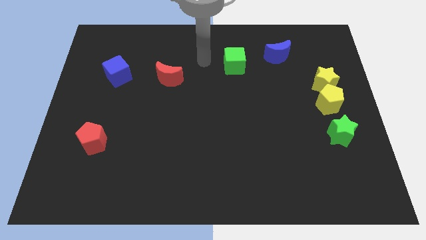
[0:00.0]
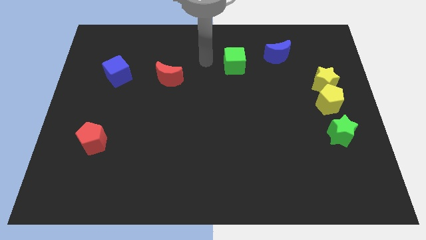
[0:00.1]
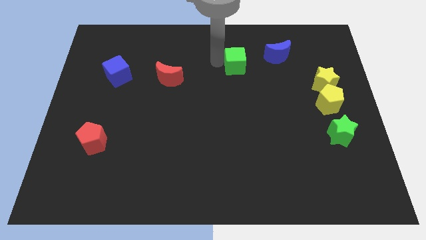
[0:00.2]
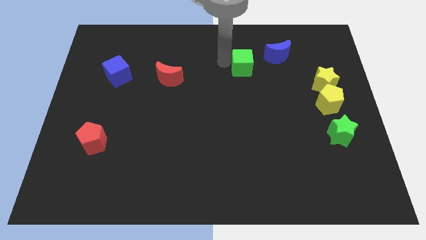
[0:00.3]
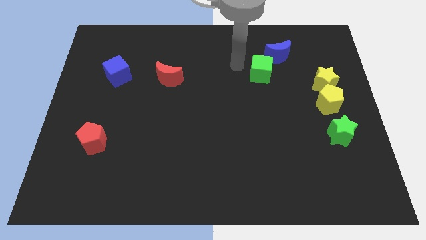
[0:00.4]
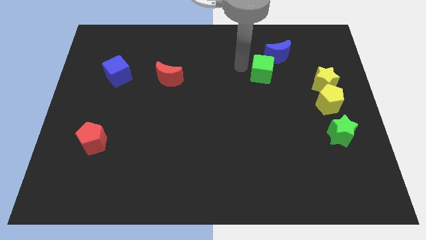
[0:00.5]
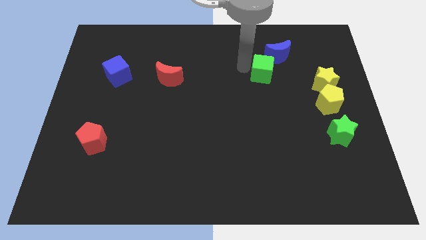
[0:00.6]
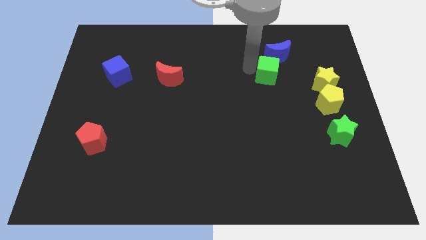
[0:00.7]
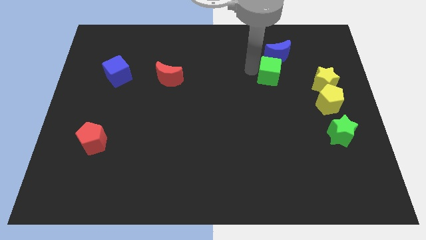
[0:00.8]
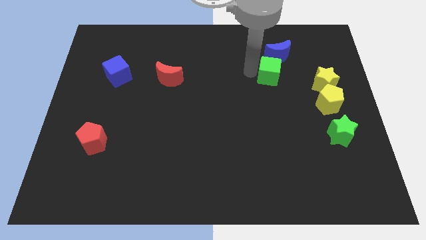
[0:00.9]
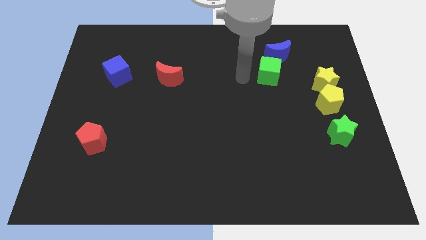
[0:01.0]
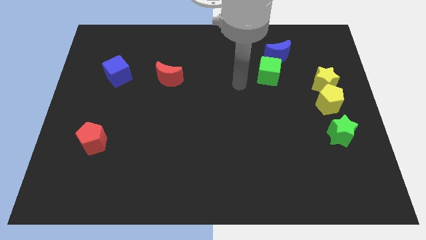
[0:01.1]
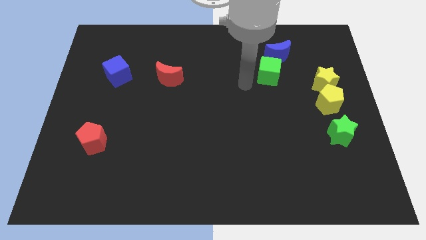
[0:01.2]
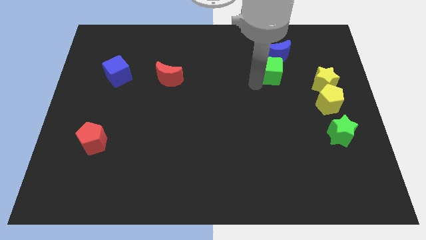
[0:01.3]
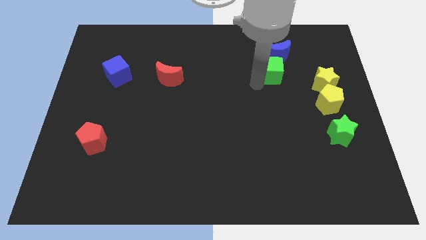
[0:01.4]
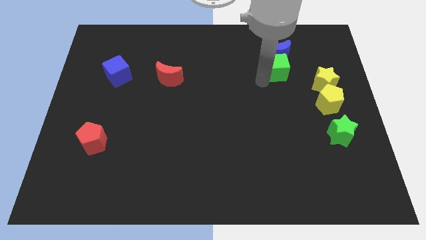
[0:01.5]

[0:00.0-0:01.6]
place the green cube below the blue moon

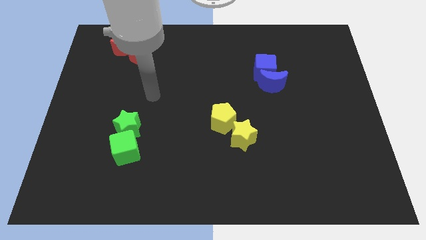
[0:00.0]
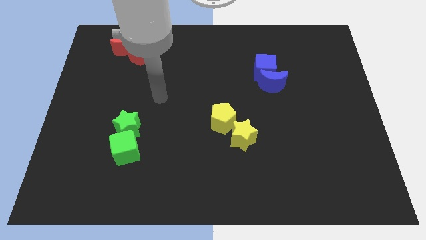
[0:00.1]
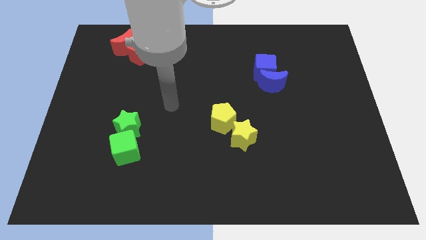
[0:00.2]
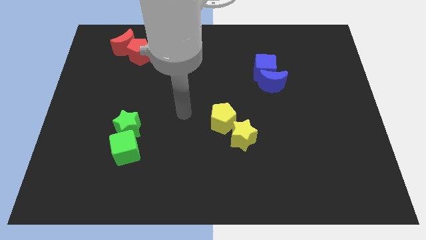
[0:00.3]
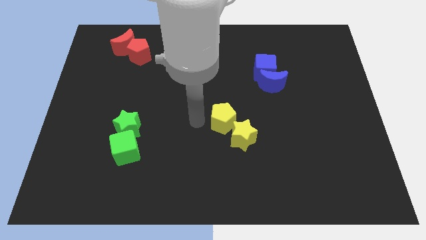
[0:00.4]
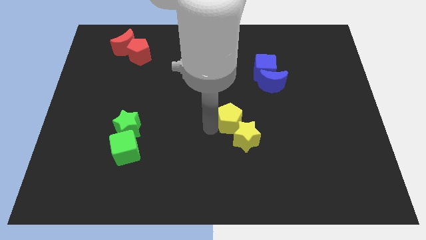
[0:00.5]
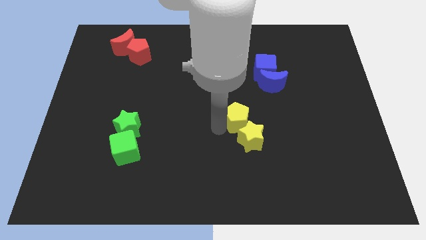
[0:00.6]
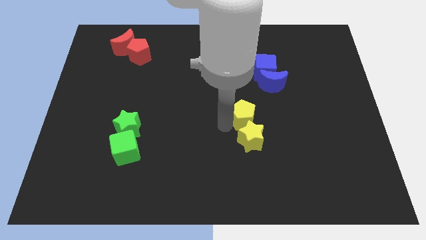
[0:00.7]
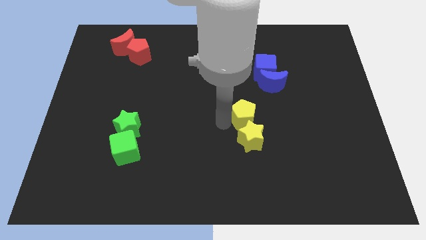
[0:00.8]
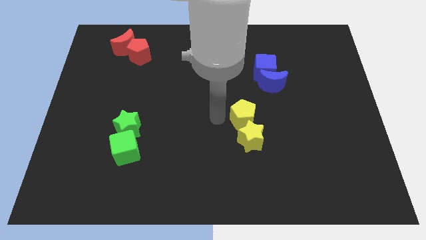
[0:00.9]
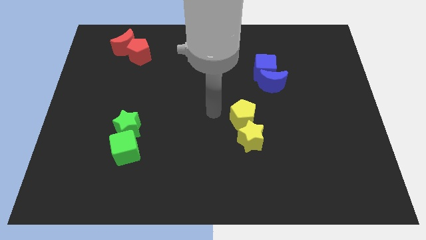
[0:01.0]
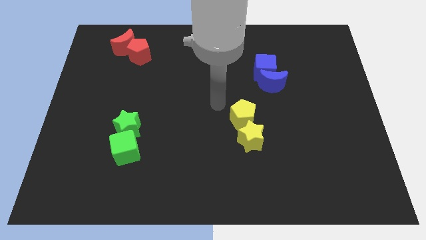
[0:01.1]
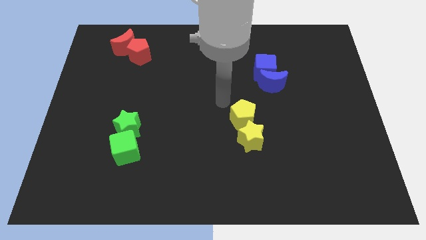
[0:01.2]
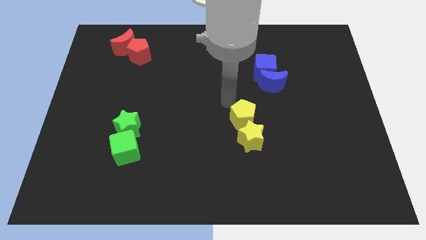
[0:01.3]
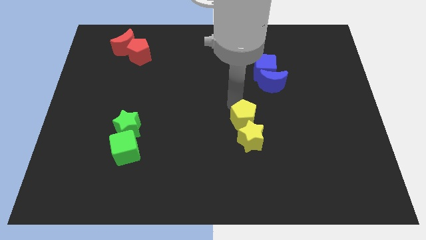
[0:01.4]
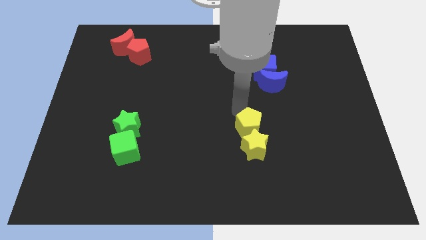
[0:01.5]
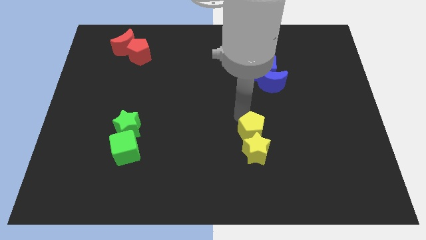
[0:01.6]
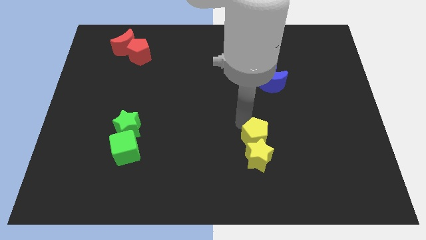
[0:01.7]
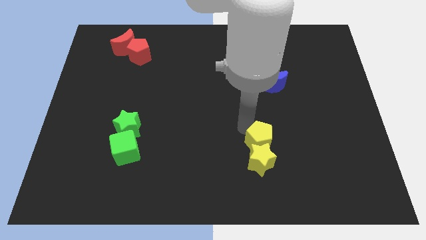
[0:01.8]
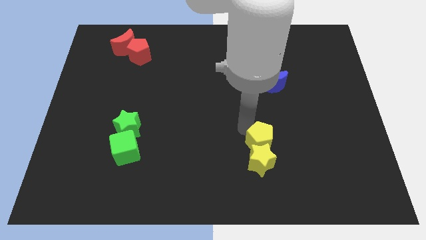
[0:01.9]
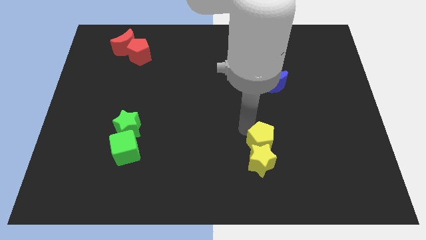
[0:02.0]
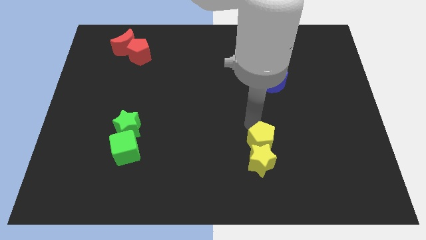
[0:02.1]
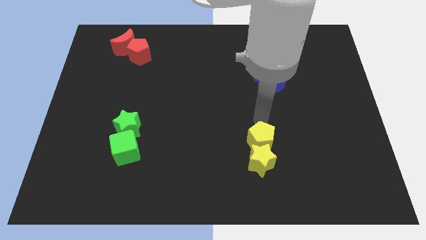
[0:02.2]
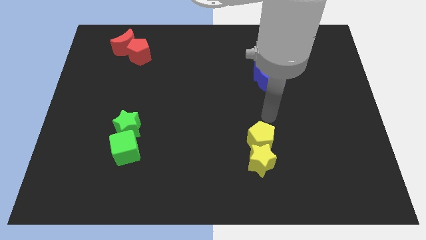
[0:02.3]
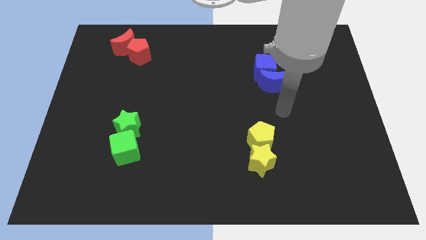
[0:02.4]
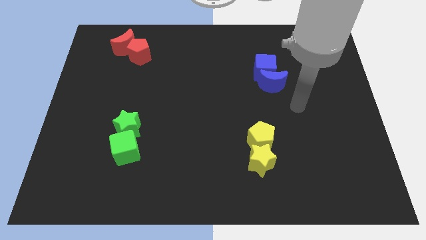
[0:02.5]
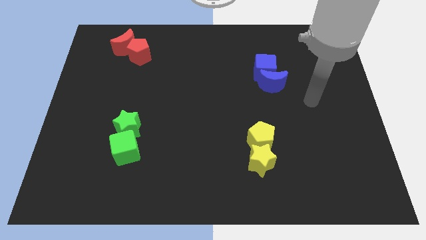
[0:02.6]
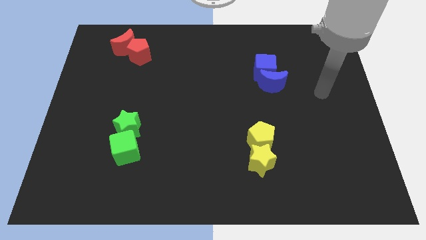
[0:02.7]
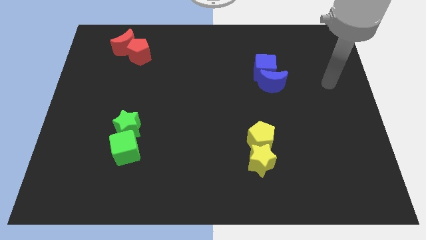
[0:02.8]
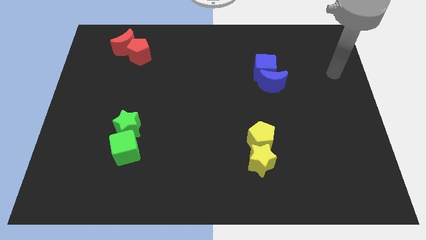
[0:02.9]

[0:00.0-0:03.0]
push the yellow star using yellow pentagon to the bottom of the board

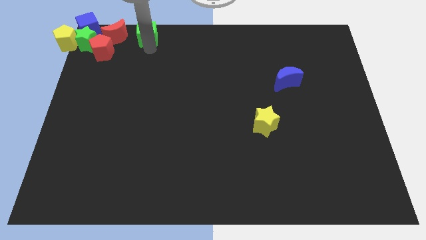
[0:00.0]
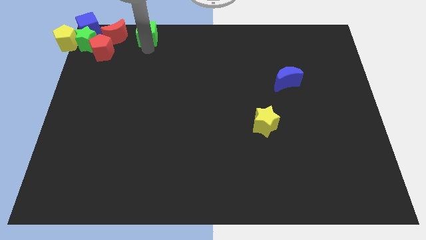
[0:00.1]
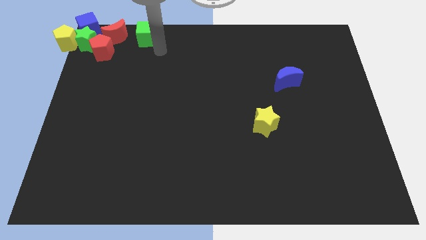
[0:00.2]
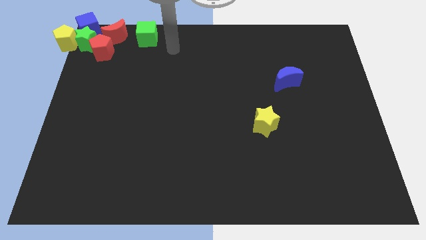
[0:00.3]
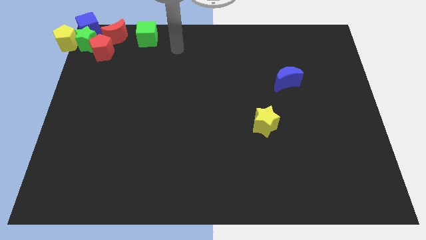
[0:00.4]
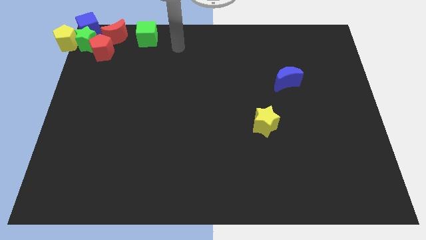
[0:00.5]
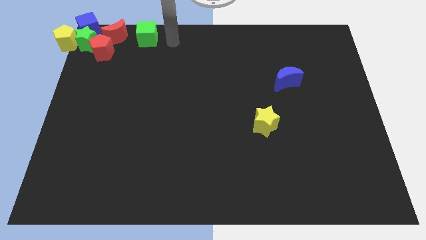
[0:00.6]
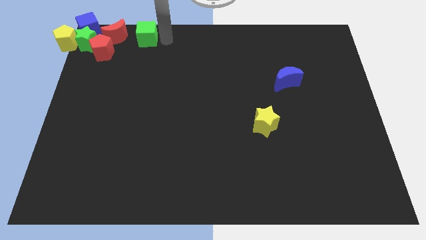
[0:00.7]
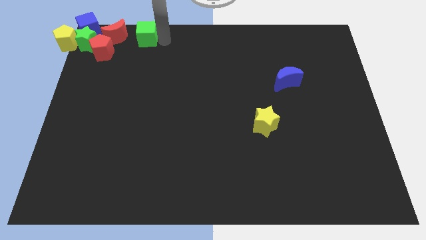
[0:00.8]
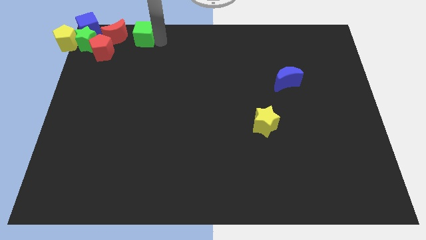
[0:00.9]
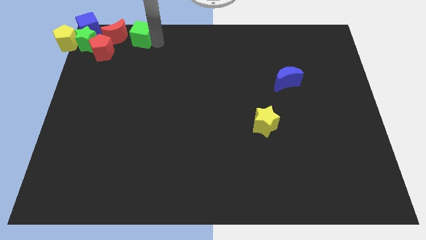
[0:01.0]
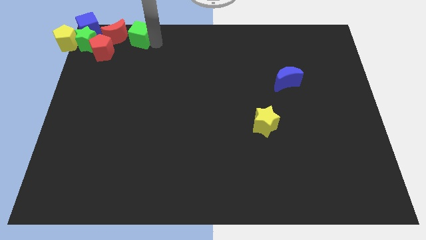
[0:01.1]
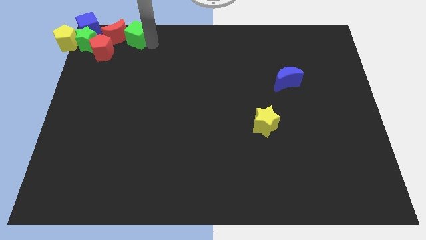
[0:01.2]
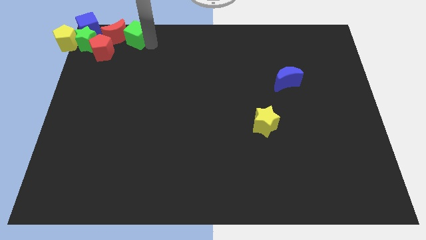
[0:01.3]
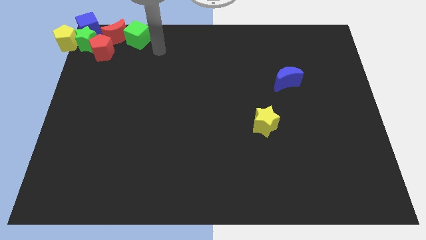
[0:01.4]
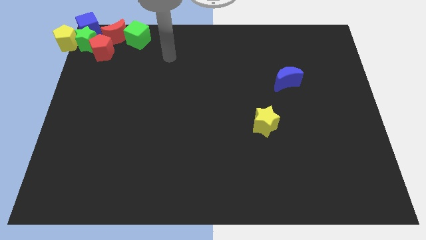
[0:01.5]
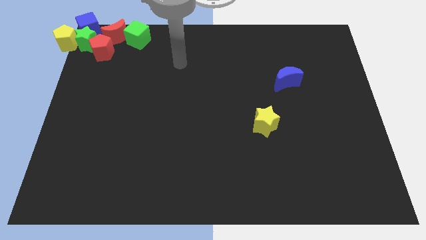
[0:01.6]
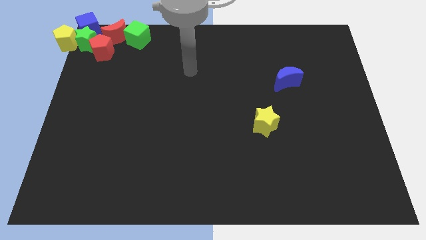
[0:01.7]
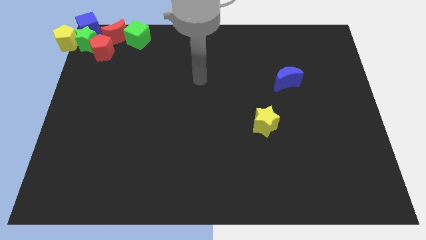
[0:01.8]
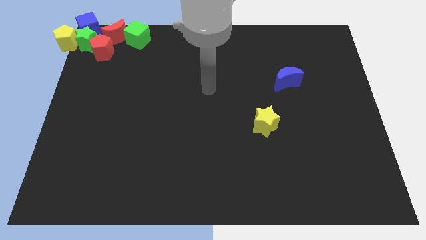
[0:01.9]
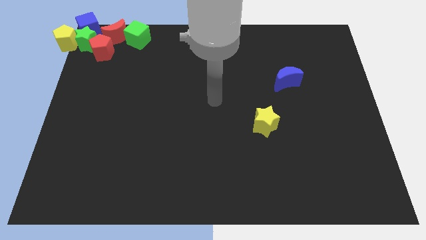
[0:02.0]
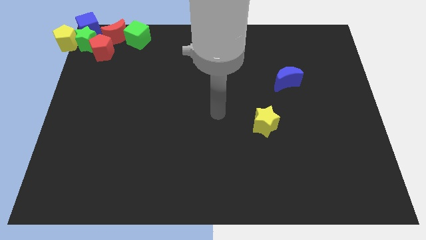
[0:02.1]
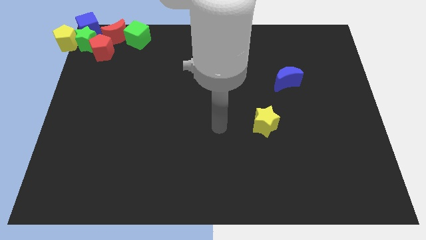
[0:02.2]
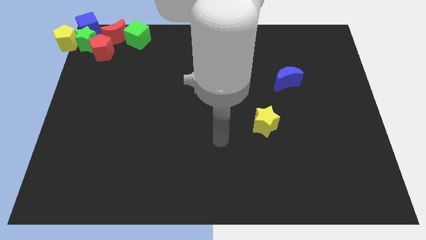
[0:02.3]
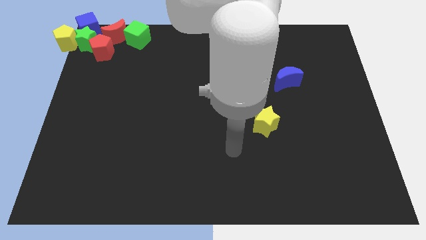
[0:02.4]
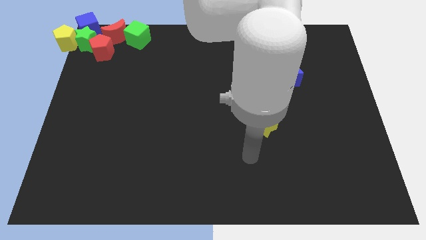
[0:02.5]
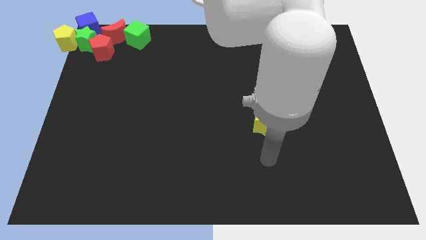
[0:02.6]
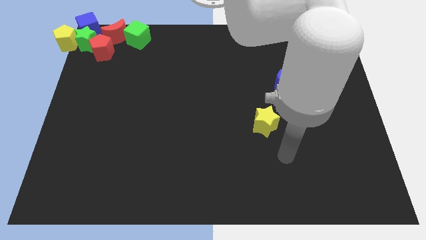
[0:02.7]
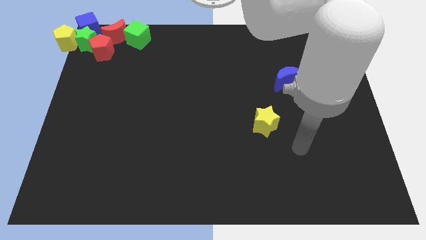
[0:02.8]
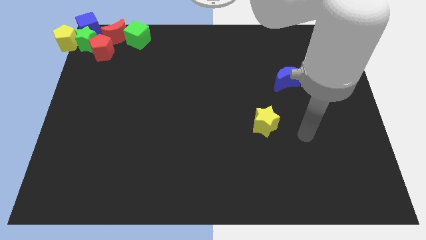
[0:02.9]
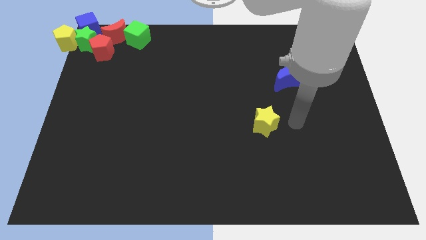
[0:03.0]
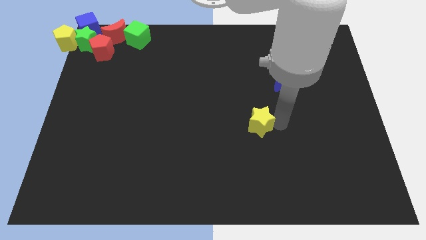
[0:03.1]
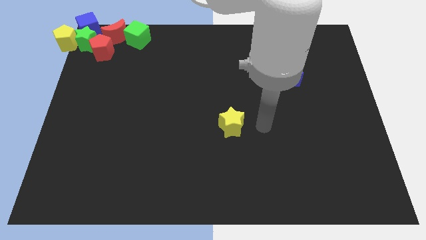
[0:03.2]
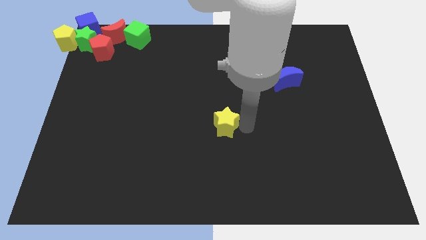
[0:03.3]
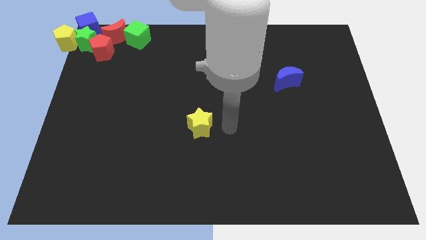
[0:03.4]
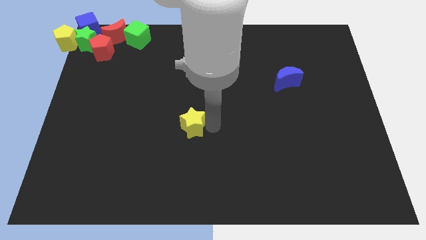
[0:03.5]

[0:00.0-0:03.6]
place the yellow star to the middle of the board

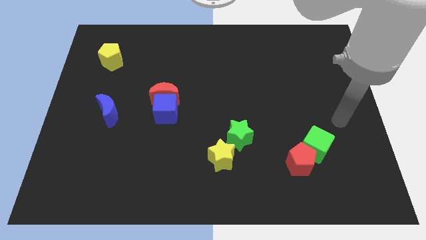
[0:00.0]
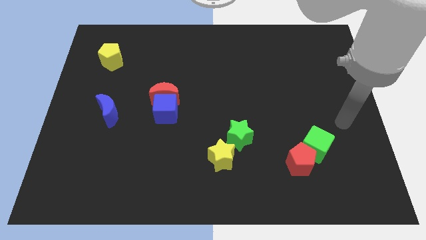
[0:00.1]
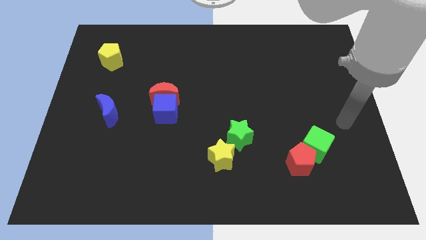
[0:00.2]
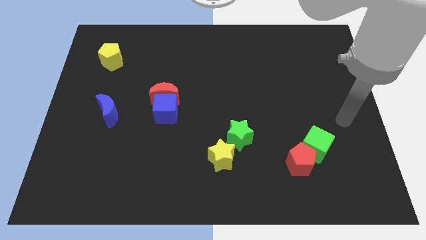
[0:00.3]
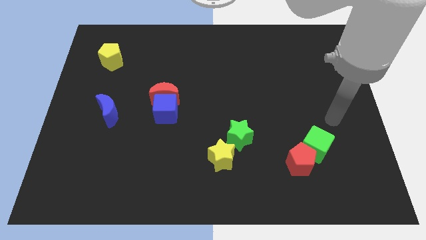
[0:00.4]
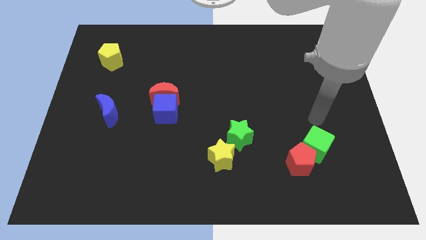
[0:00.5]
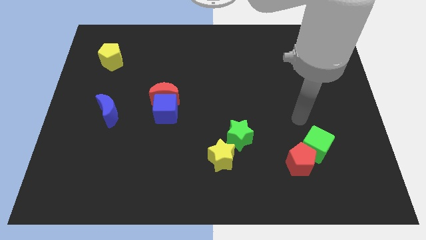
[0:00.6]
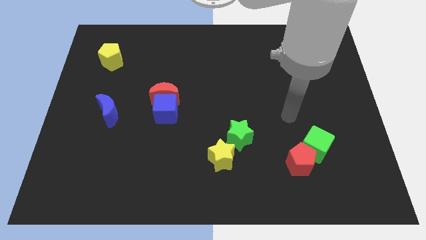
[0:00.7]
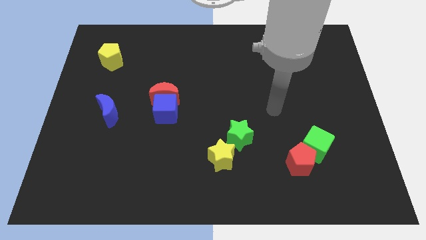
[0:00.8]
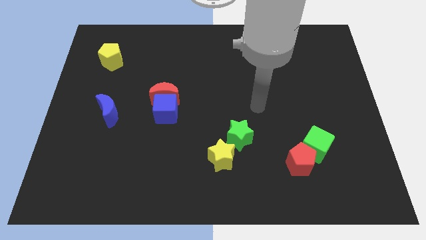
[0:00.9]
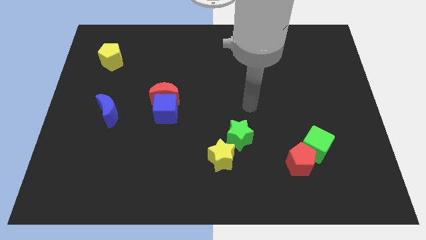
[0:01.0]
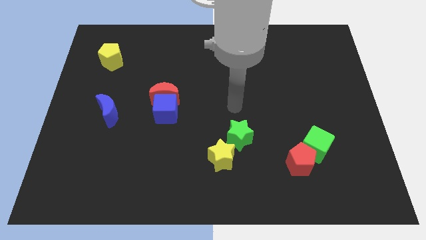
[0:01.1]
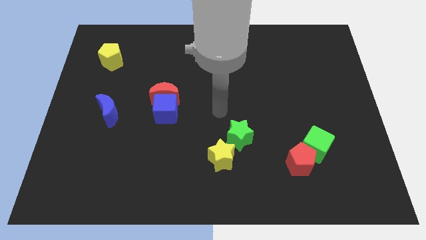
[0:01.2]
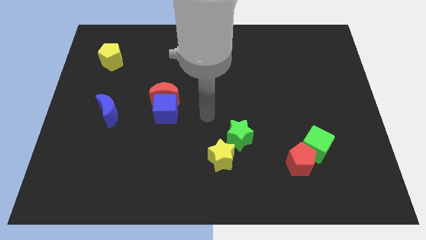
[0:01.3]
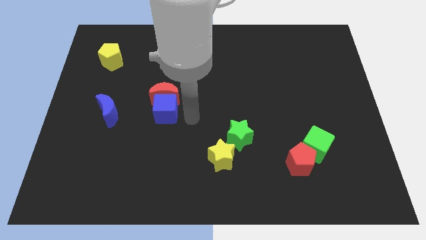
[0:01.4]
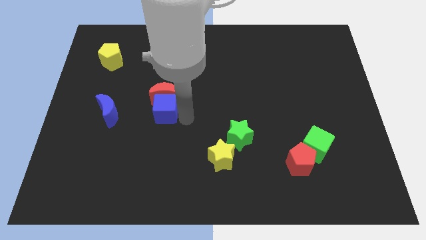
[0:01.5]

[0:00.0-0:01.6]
point your hand at the right side of the blue cube
